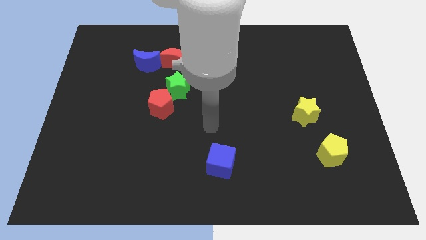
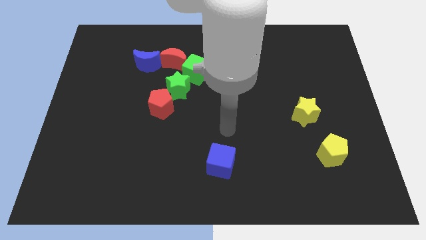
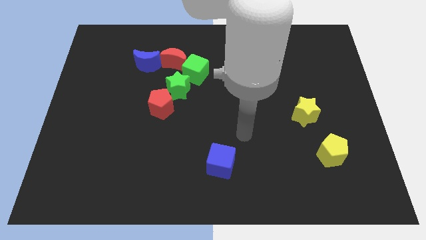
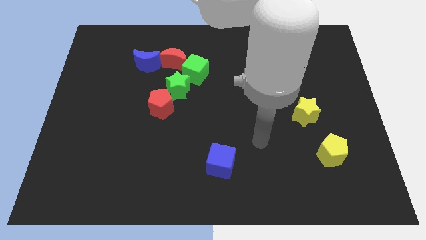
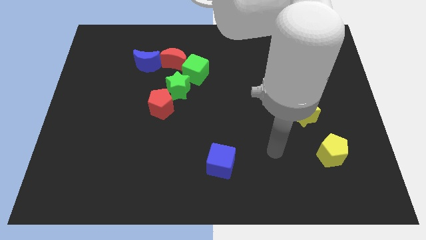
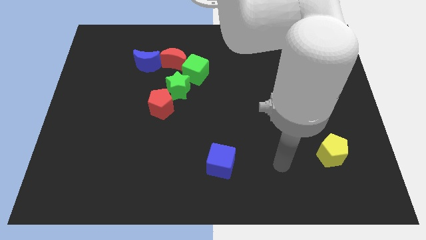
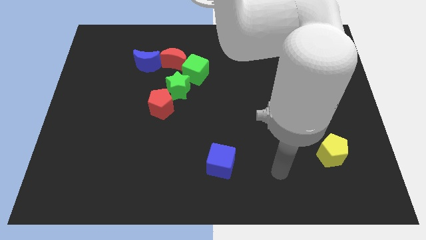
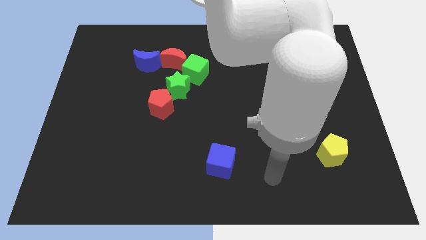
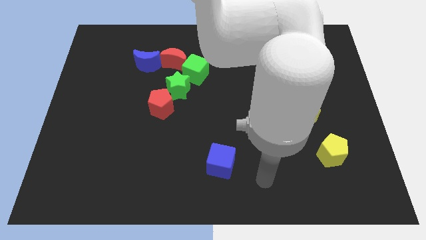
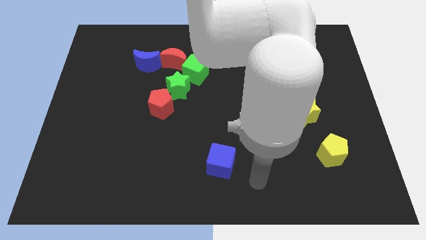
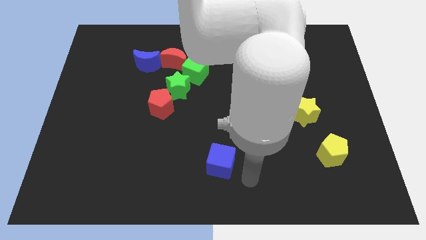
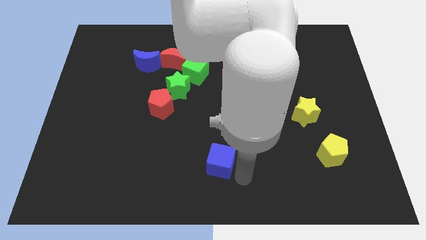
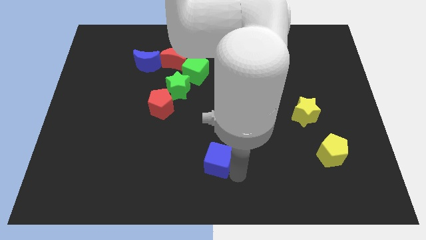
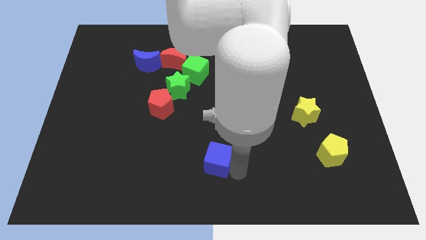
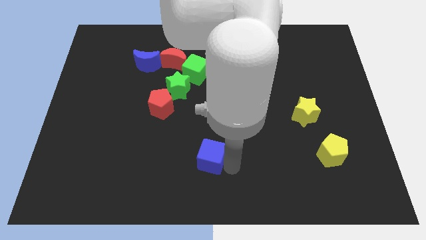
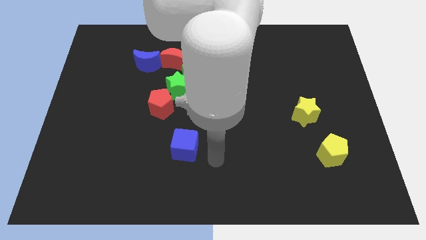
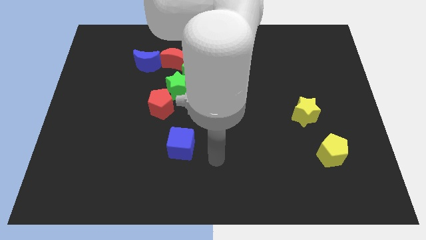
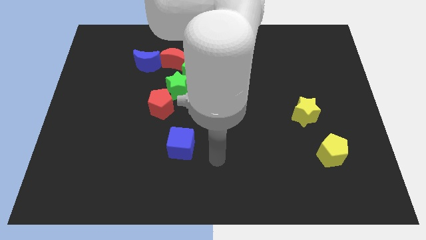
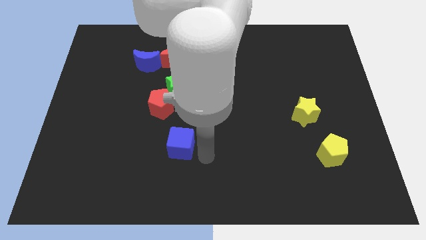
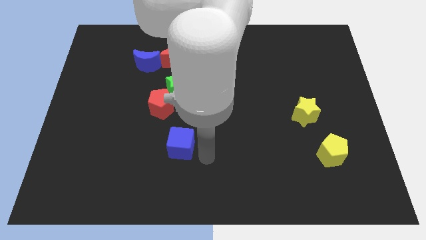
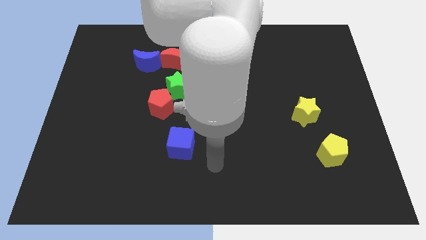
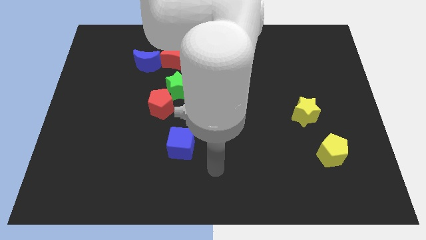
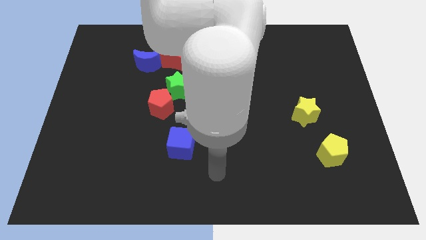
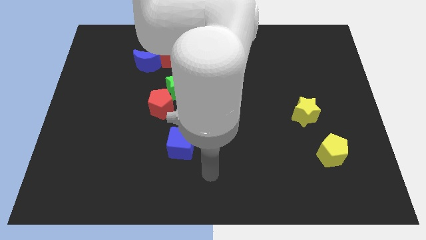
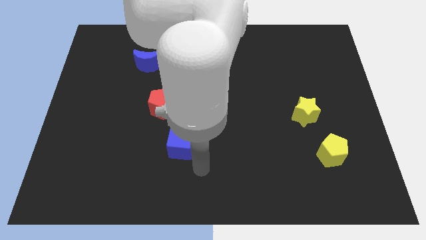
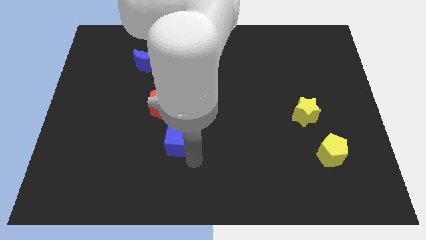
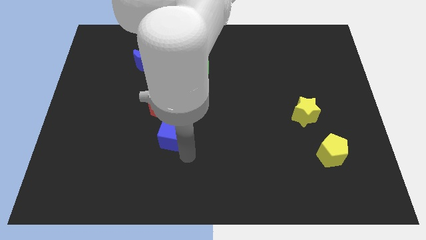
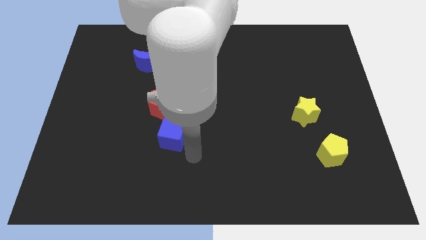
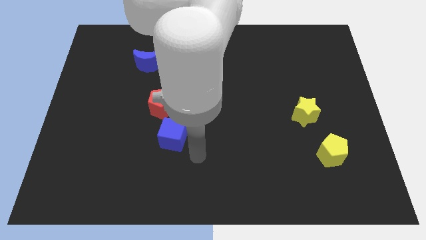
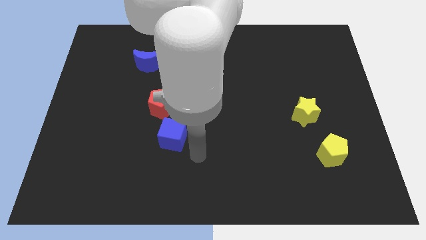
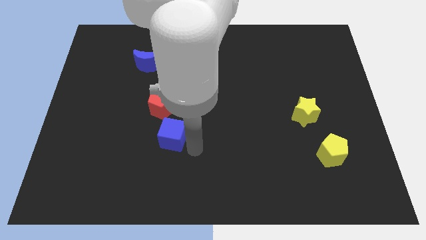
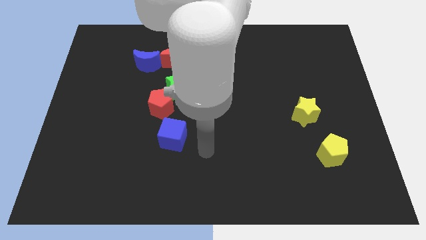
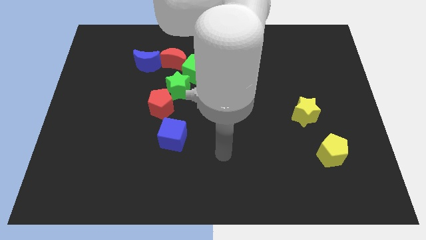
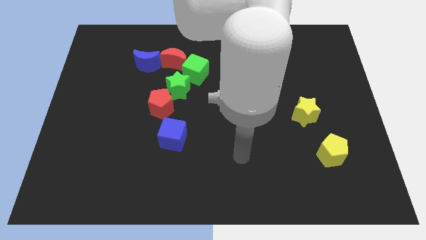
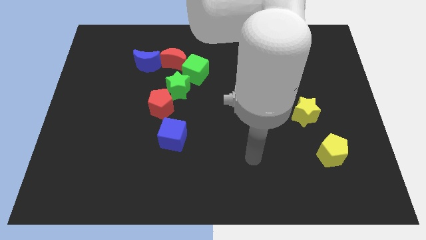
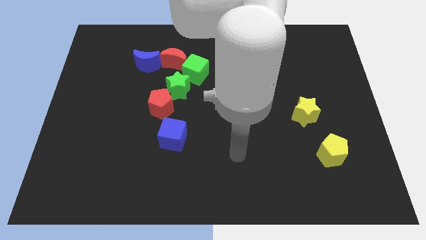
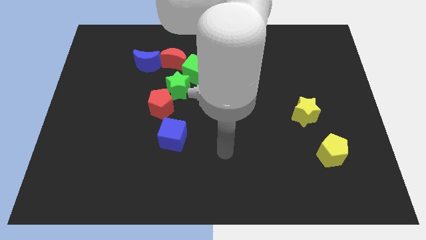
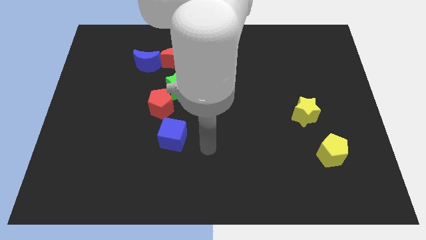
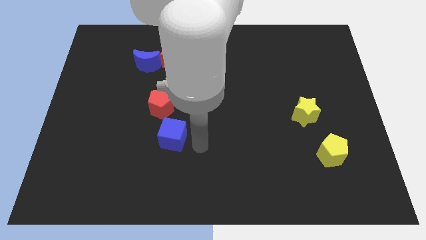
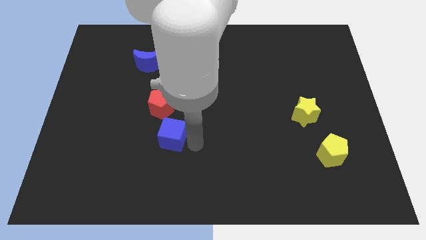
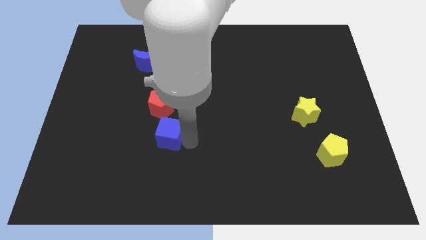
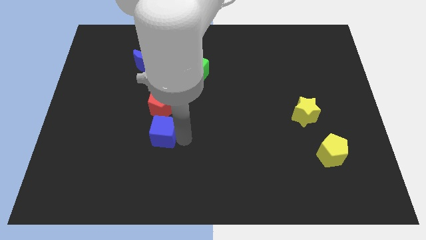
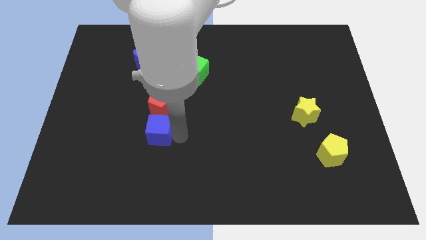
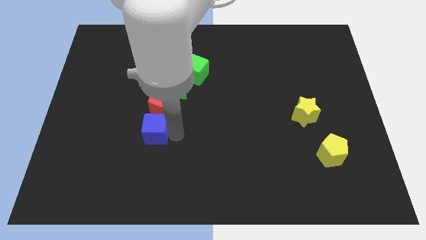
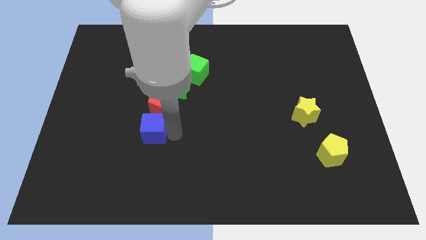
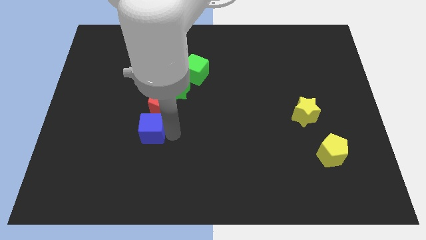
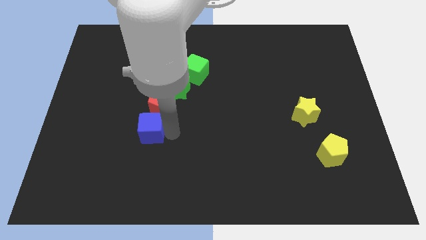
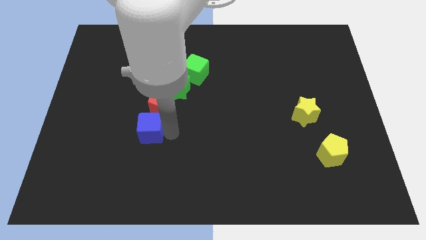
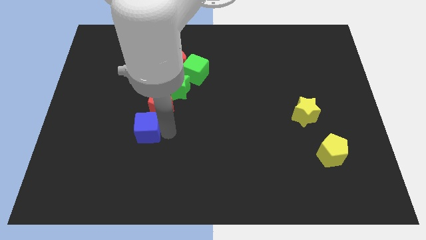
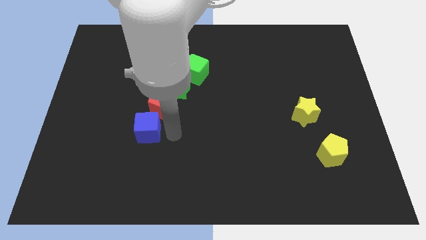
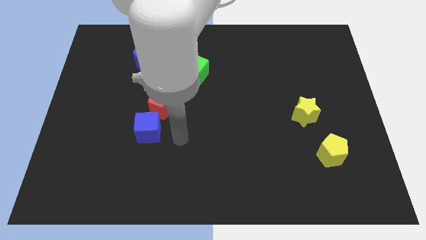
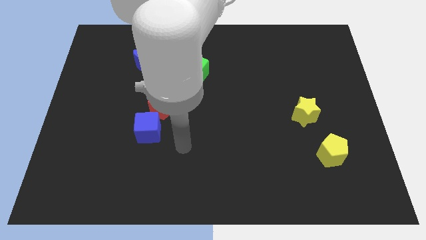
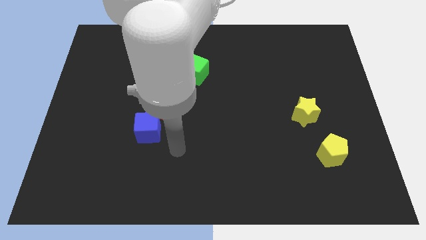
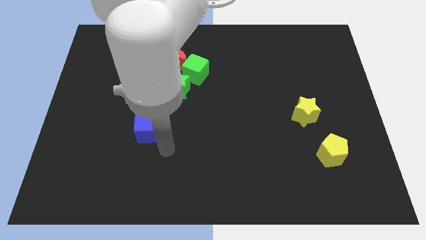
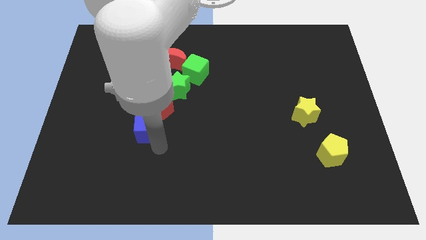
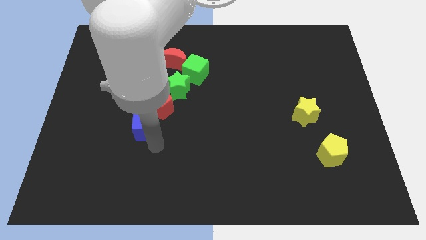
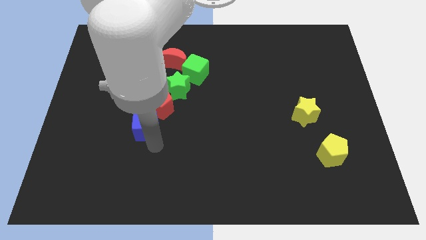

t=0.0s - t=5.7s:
push the blue cube below the red pentagon

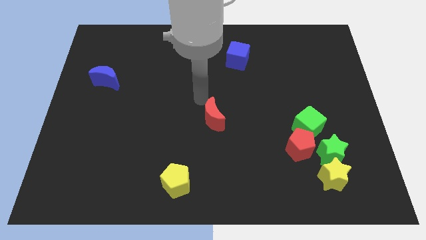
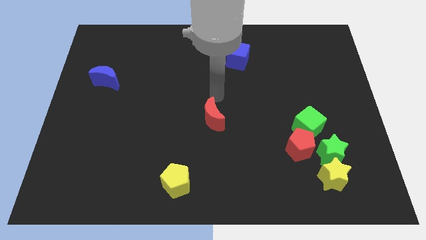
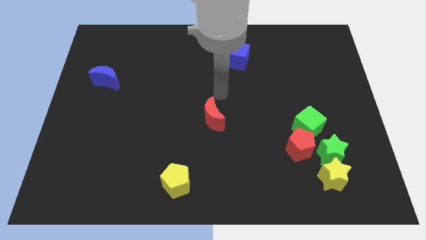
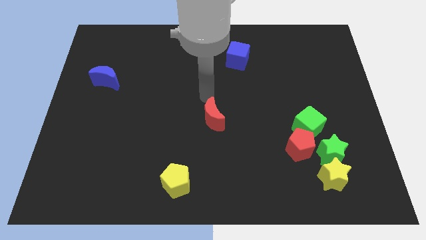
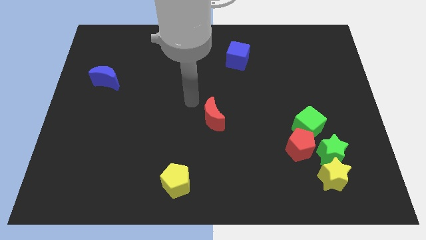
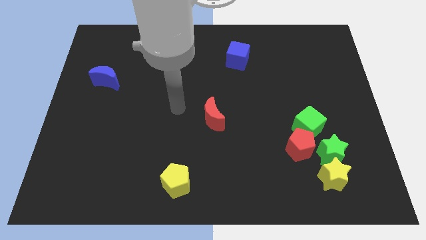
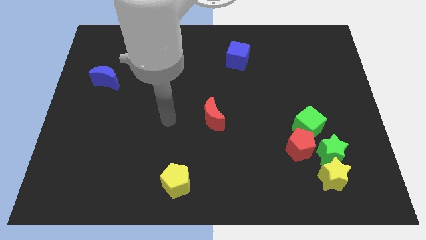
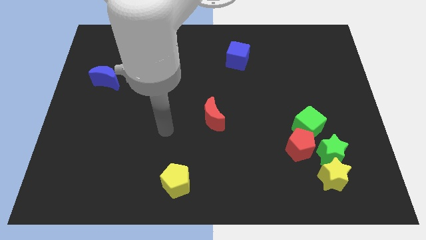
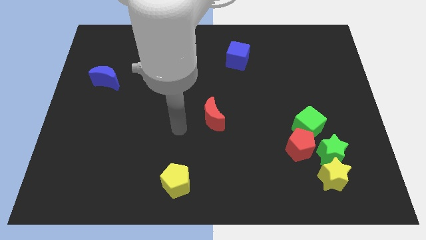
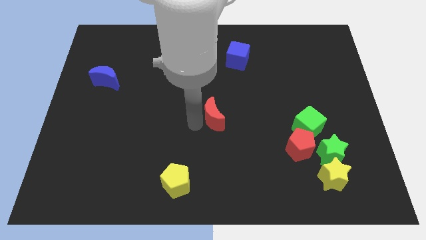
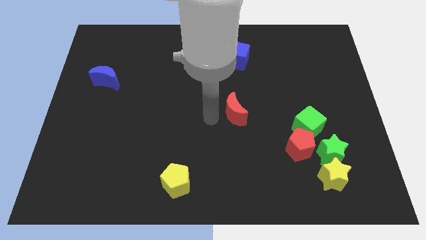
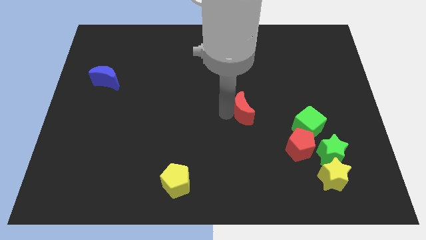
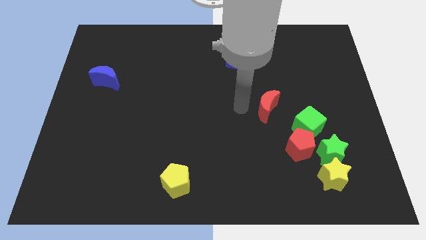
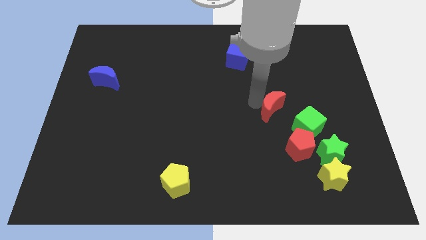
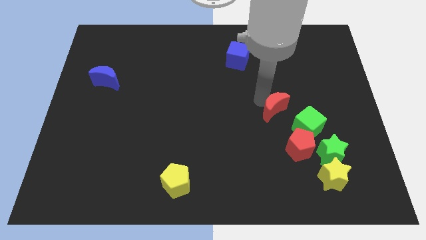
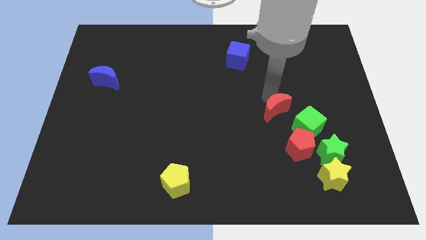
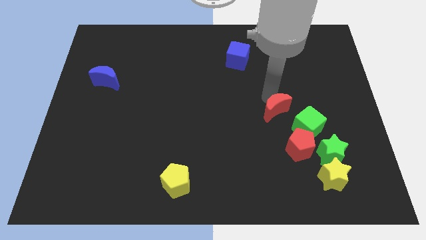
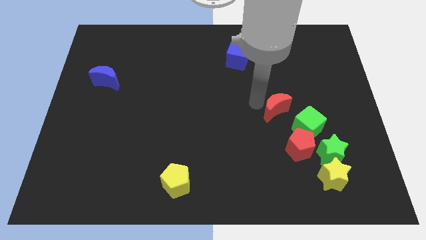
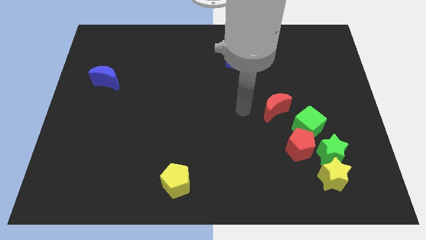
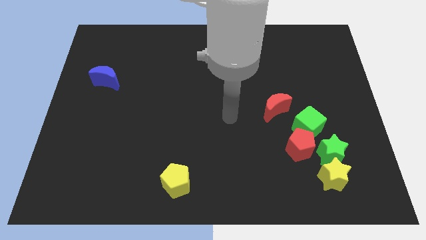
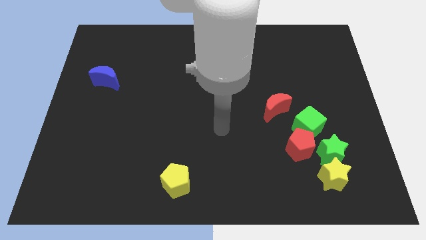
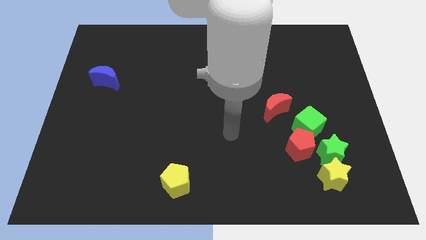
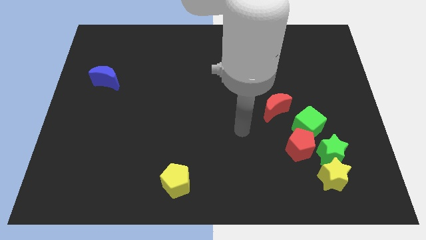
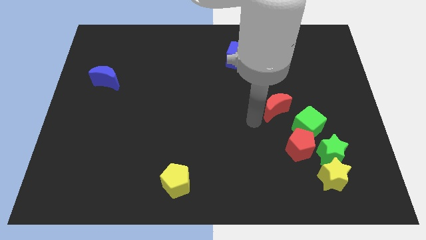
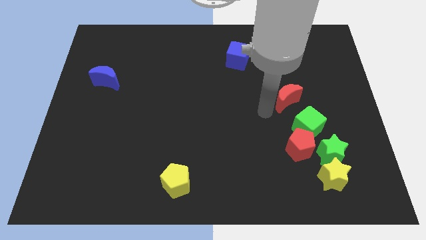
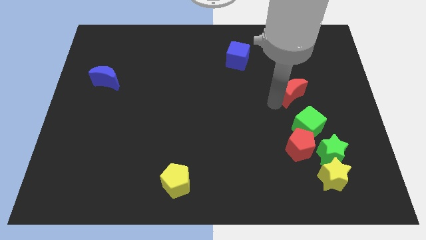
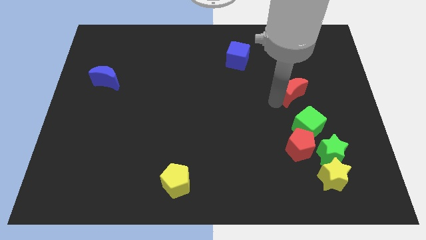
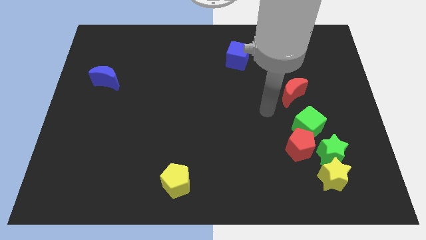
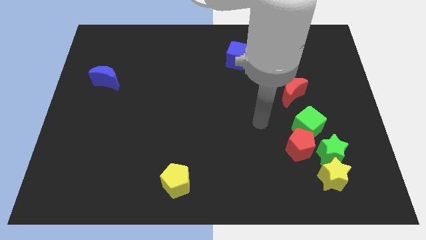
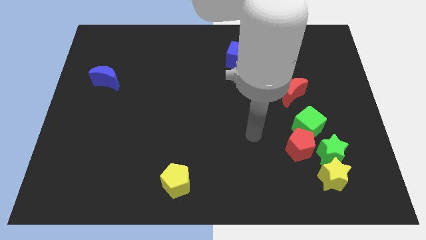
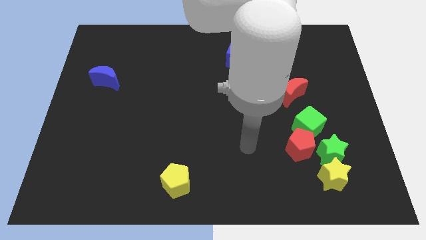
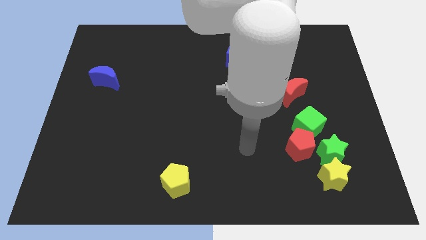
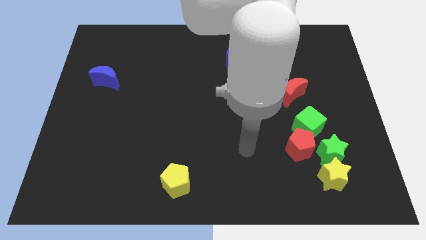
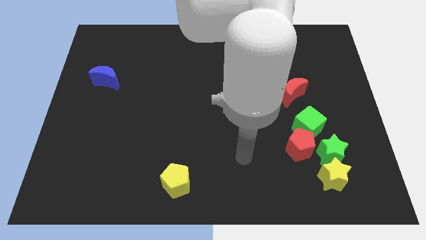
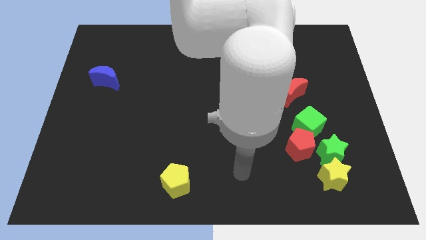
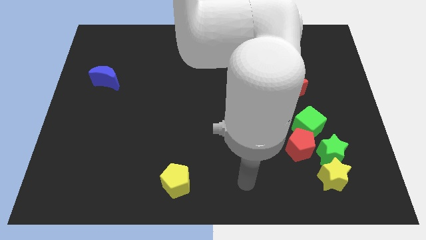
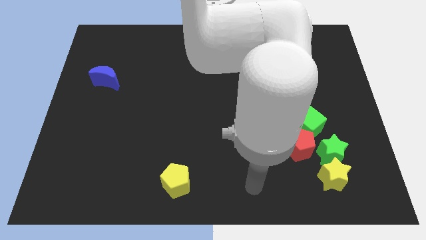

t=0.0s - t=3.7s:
move red moon above green cube
